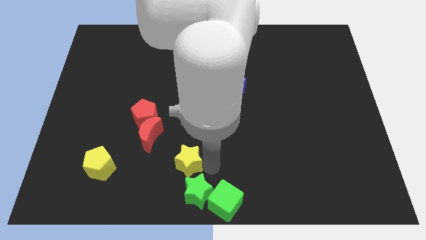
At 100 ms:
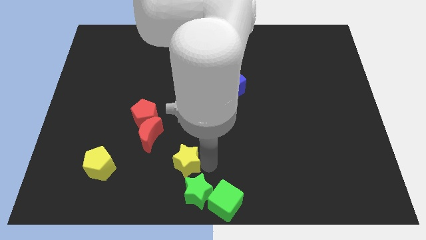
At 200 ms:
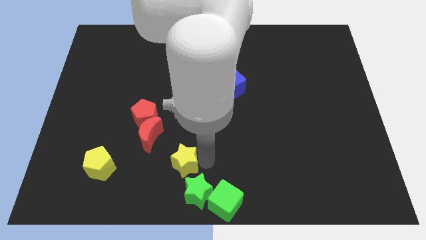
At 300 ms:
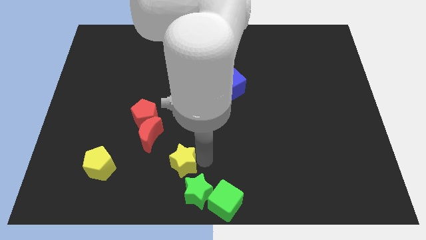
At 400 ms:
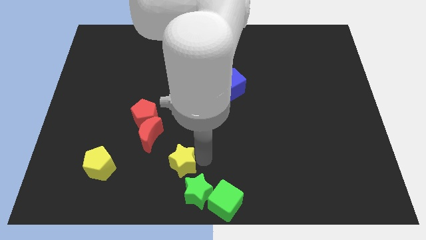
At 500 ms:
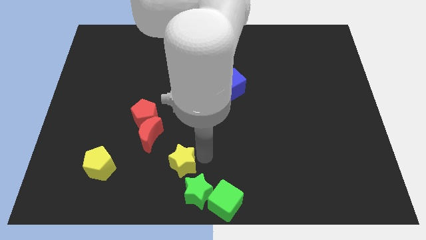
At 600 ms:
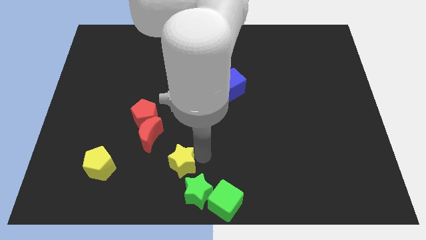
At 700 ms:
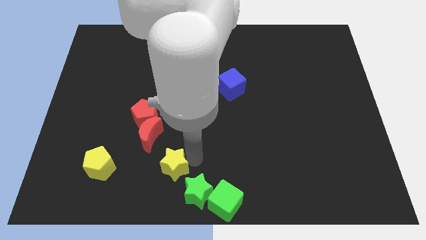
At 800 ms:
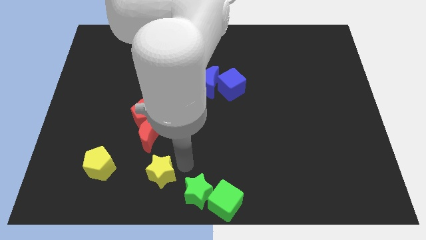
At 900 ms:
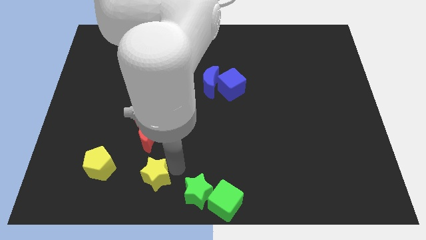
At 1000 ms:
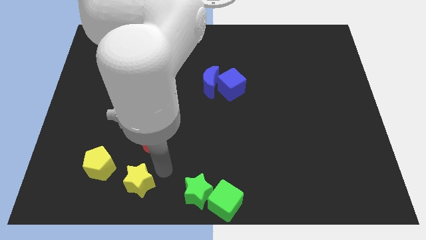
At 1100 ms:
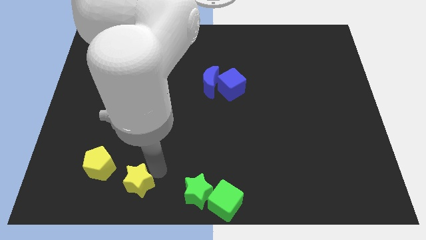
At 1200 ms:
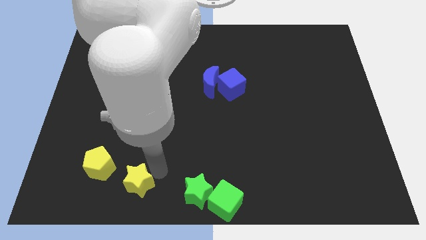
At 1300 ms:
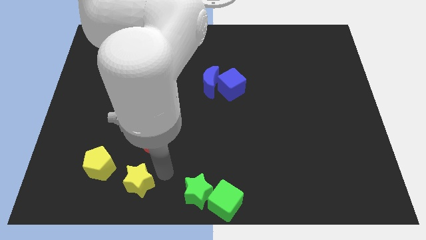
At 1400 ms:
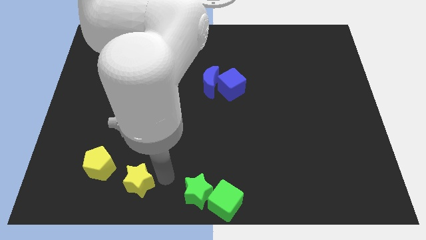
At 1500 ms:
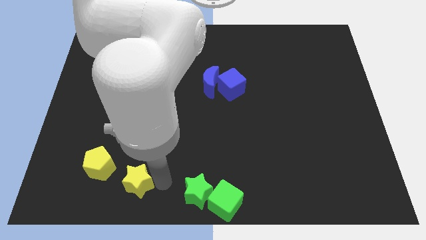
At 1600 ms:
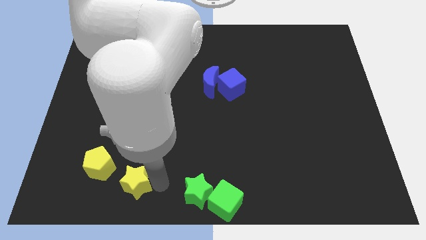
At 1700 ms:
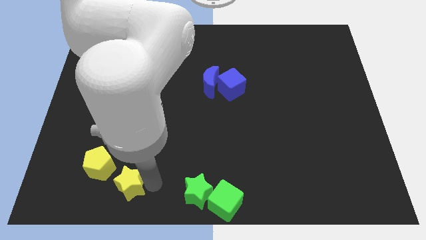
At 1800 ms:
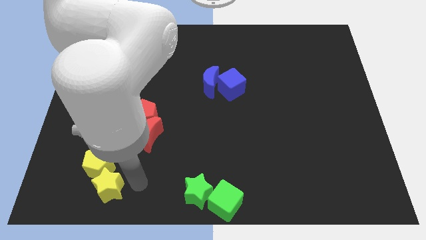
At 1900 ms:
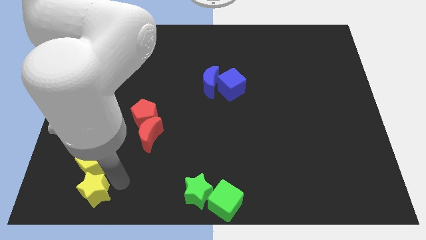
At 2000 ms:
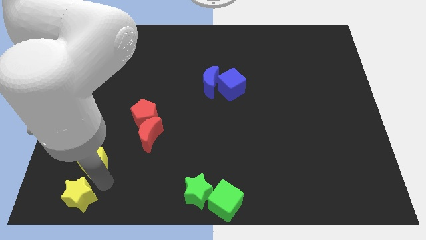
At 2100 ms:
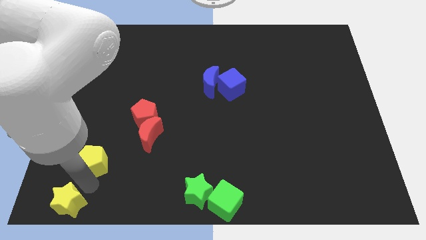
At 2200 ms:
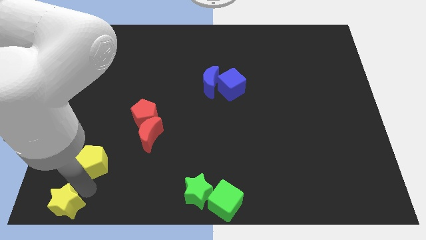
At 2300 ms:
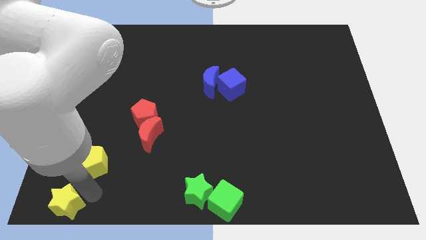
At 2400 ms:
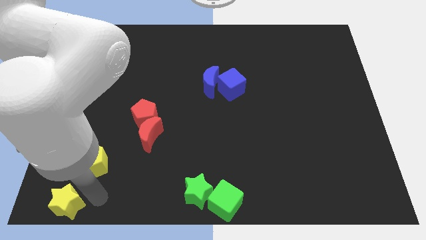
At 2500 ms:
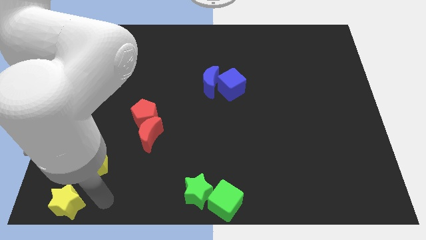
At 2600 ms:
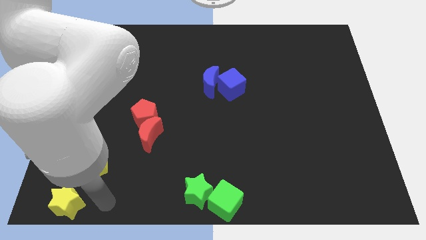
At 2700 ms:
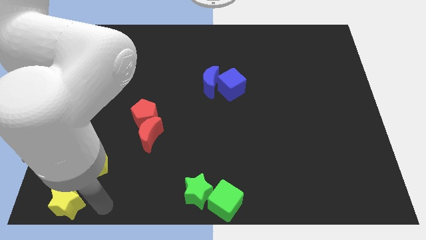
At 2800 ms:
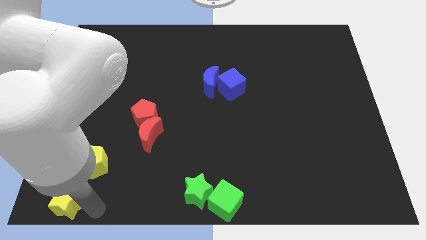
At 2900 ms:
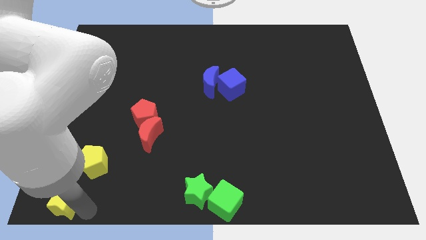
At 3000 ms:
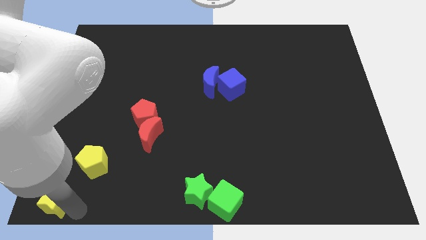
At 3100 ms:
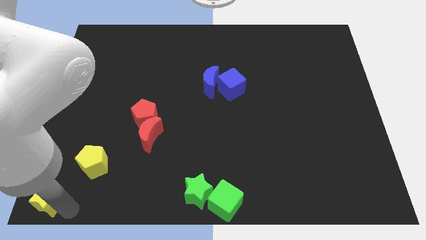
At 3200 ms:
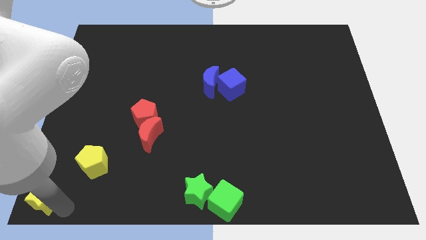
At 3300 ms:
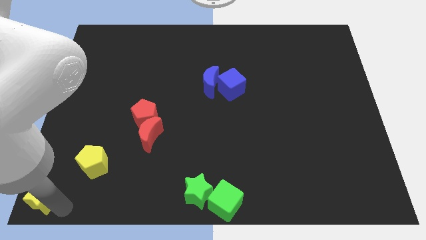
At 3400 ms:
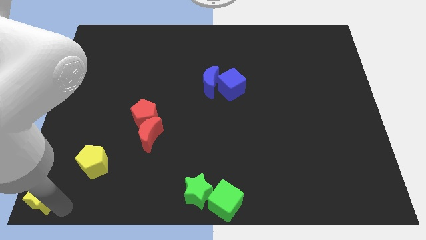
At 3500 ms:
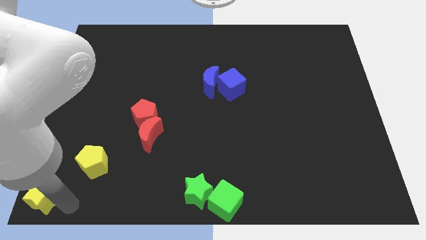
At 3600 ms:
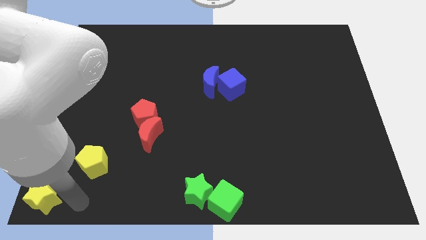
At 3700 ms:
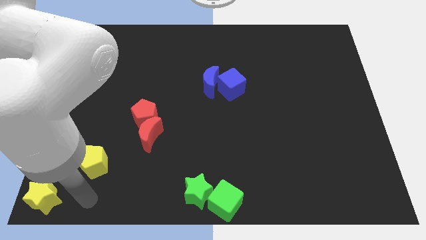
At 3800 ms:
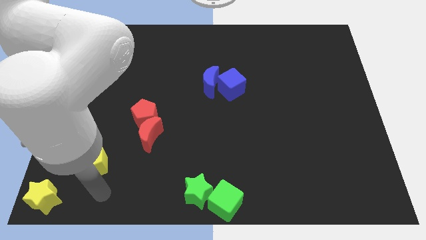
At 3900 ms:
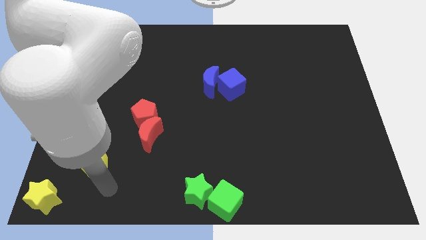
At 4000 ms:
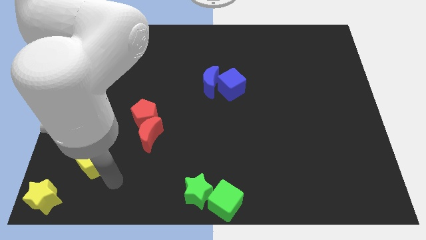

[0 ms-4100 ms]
push the yellow star to the bottom left of the board

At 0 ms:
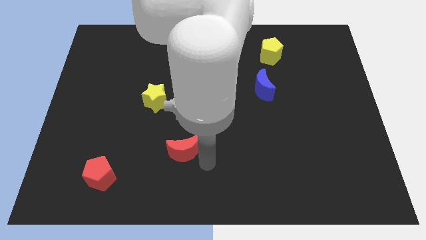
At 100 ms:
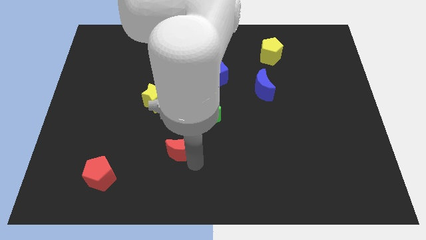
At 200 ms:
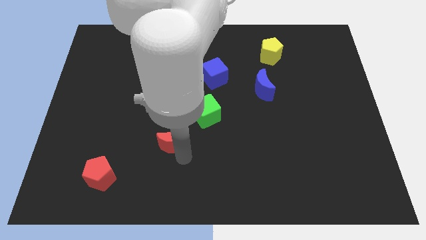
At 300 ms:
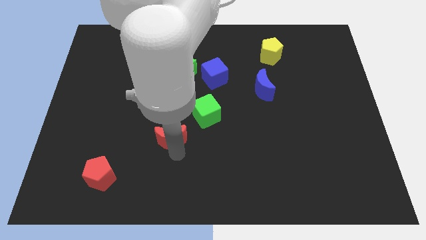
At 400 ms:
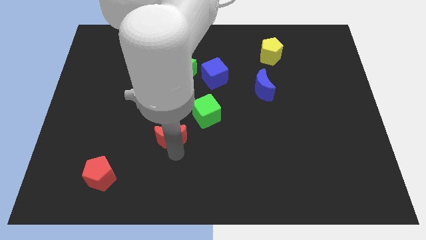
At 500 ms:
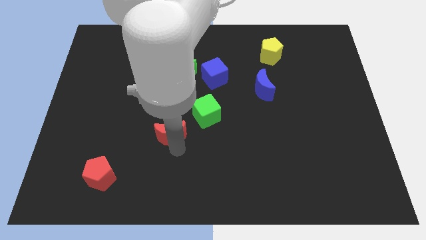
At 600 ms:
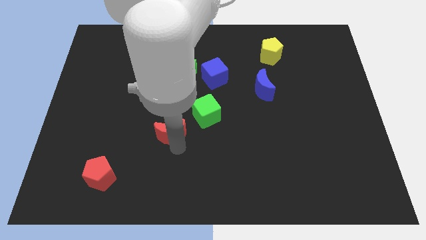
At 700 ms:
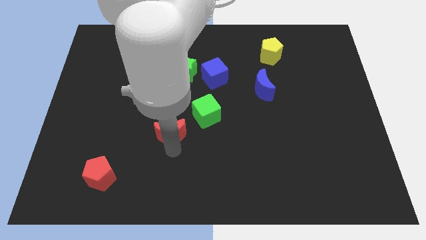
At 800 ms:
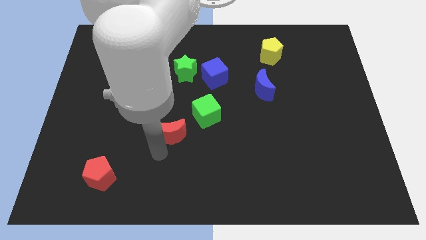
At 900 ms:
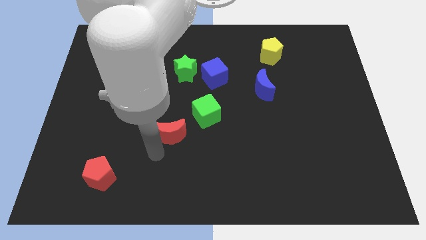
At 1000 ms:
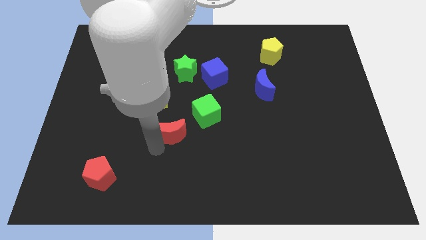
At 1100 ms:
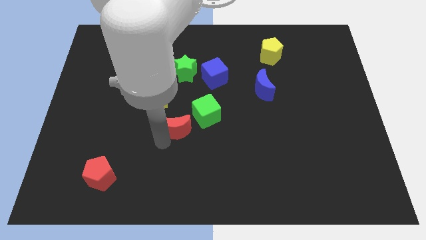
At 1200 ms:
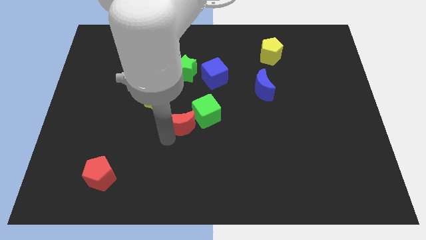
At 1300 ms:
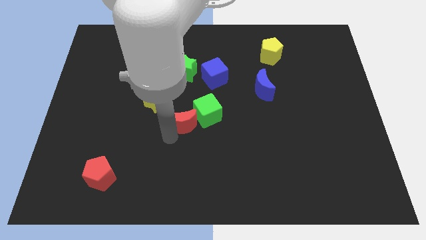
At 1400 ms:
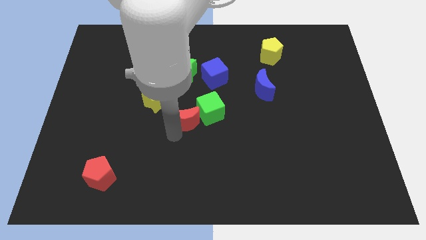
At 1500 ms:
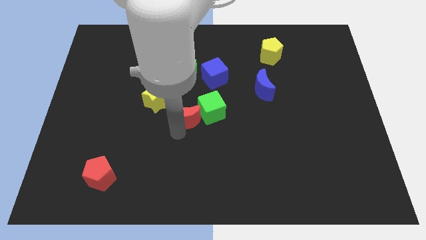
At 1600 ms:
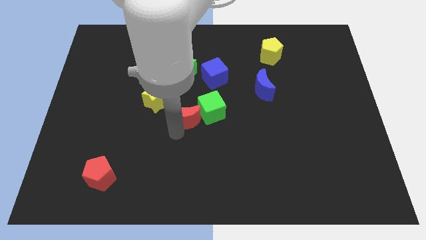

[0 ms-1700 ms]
push the red crescent in to the green cube

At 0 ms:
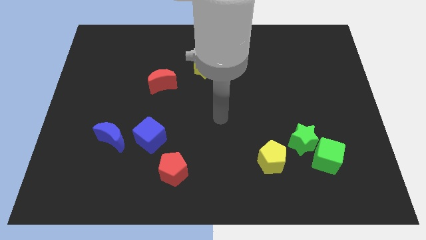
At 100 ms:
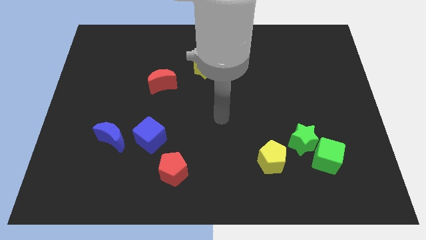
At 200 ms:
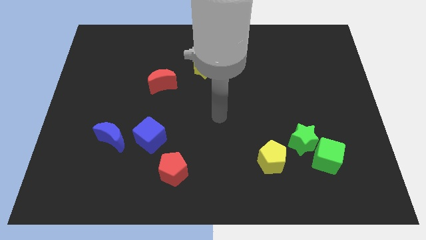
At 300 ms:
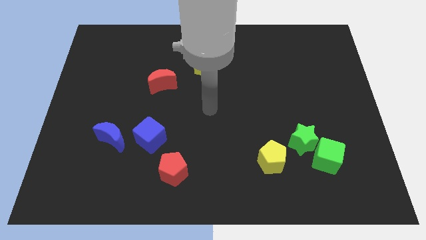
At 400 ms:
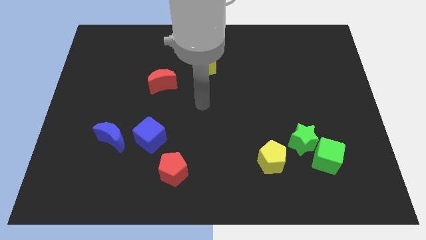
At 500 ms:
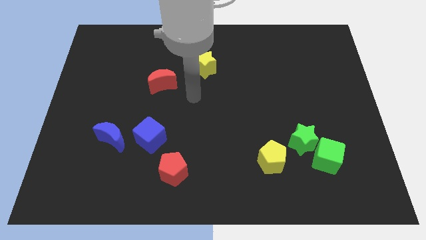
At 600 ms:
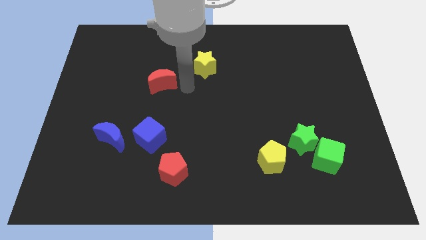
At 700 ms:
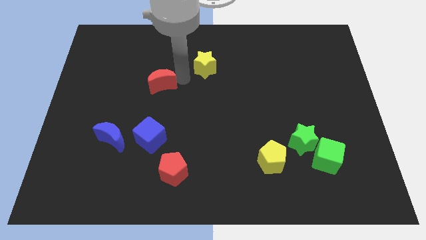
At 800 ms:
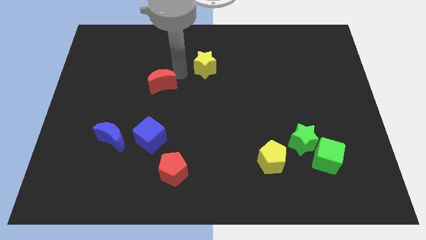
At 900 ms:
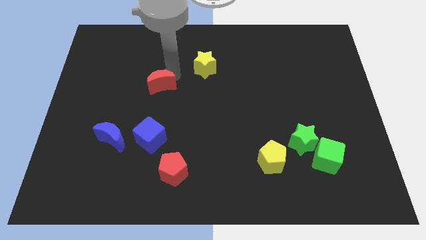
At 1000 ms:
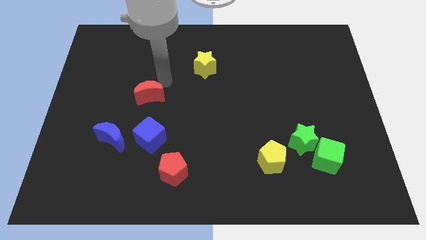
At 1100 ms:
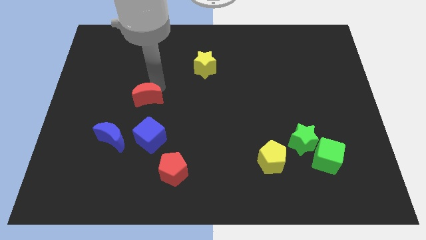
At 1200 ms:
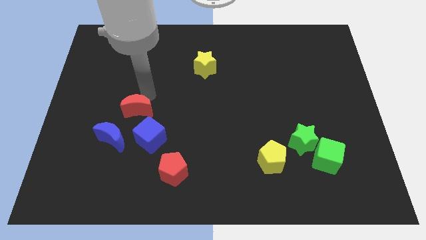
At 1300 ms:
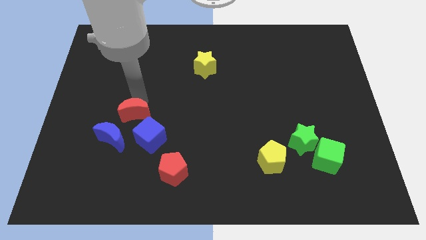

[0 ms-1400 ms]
push the red crescent to the top left side of the blue cube

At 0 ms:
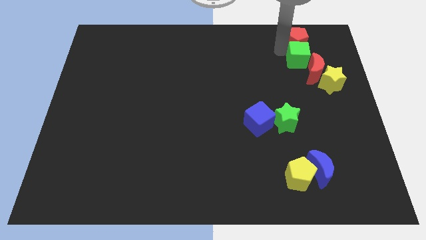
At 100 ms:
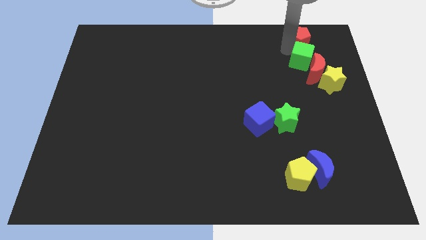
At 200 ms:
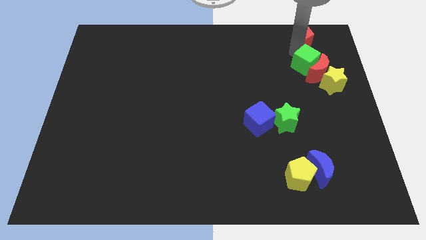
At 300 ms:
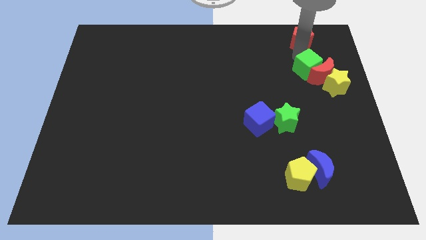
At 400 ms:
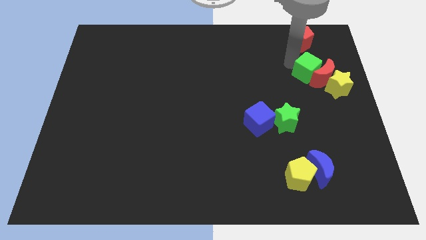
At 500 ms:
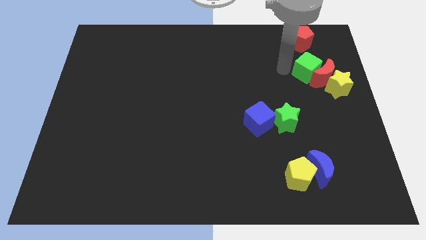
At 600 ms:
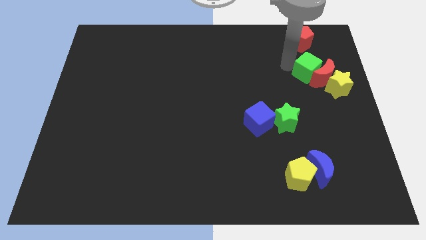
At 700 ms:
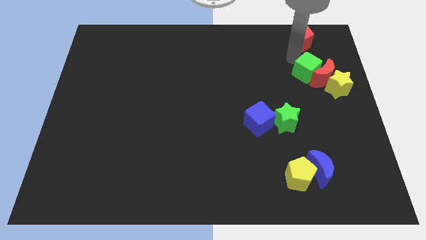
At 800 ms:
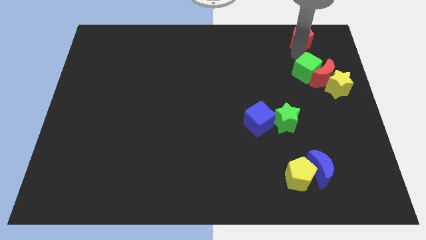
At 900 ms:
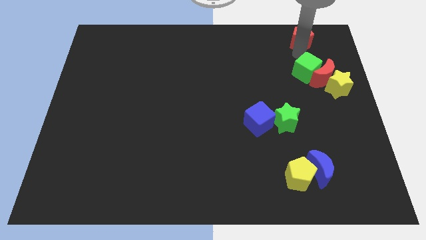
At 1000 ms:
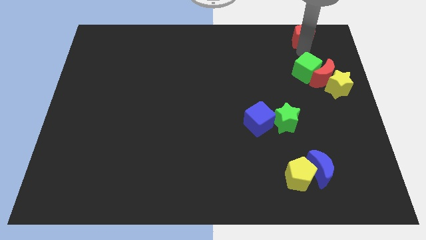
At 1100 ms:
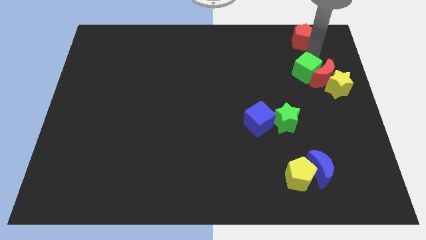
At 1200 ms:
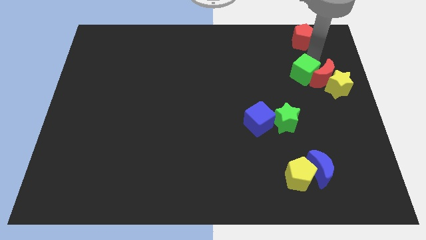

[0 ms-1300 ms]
push the green cube into the red moon

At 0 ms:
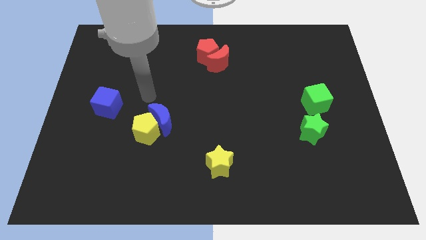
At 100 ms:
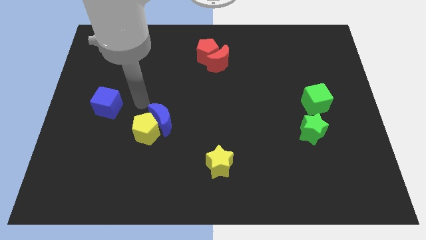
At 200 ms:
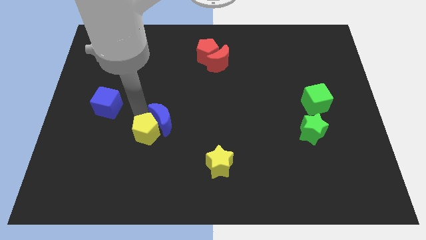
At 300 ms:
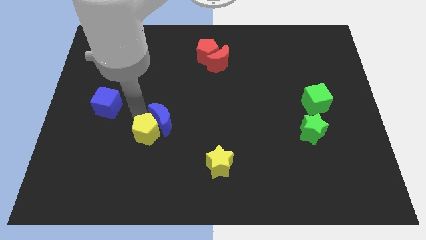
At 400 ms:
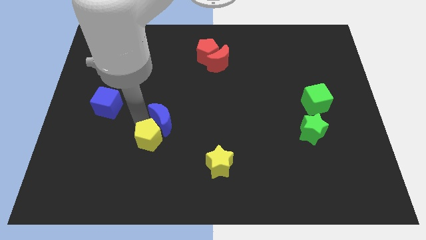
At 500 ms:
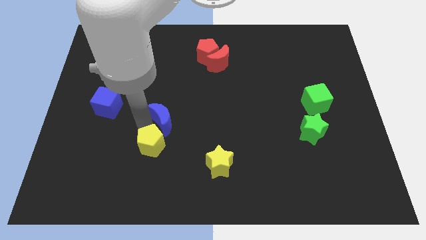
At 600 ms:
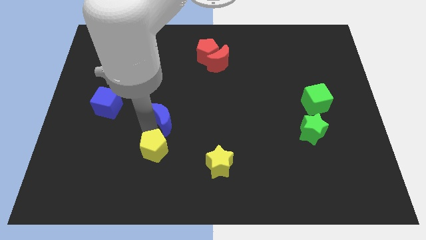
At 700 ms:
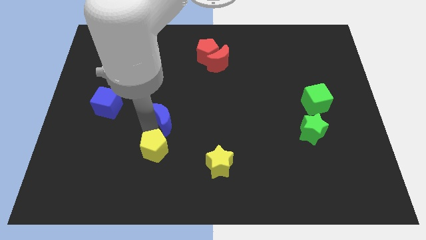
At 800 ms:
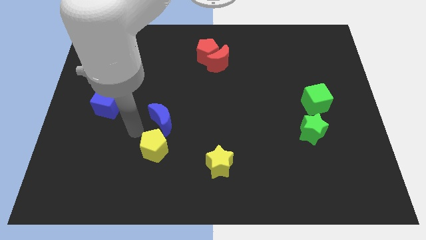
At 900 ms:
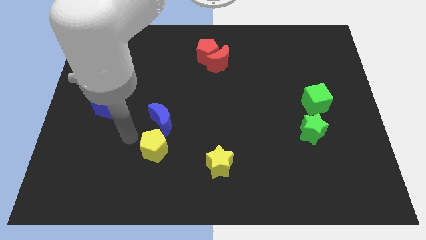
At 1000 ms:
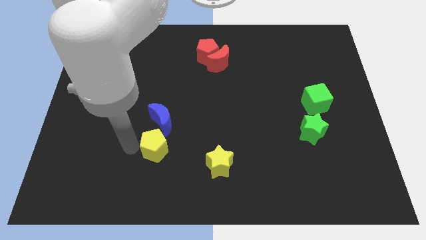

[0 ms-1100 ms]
place the yellow pentagon below the blue crescent
